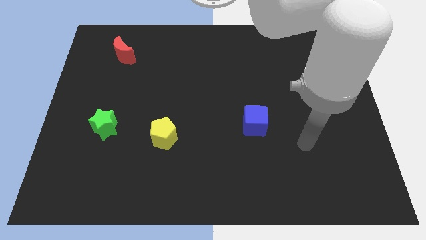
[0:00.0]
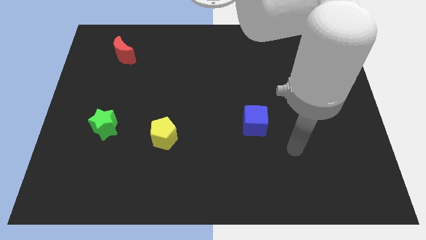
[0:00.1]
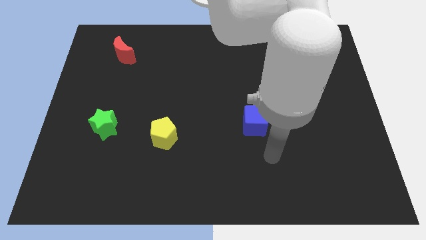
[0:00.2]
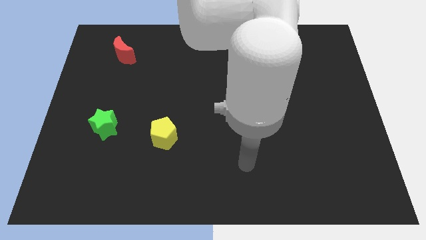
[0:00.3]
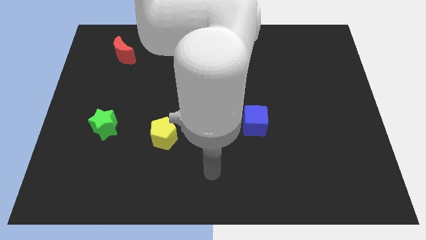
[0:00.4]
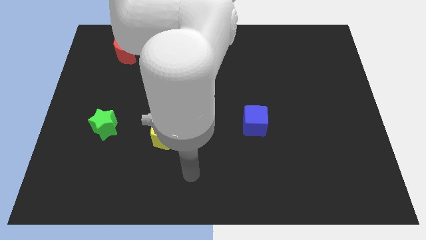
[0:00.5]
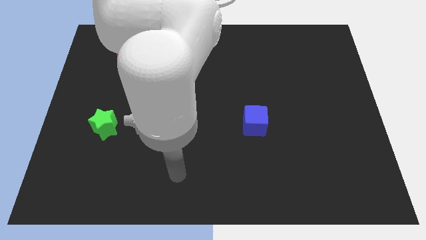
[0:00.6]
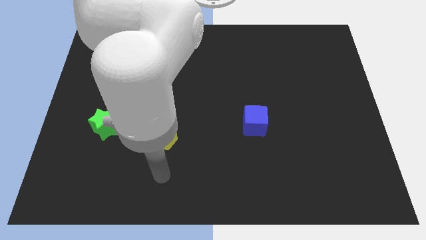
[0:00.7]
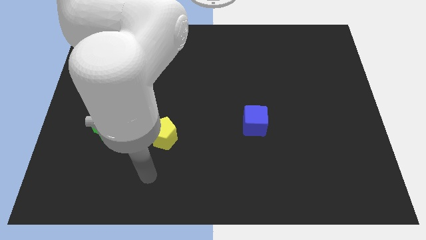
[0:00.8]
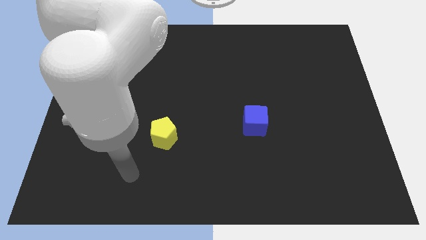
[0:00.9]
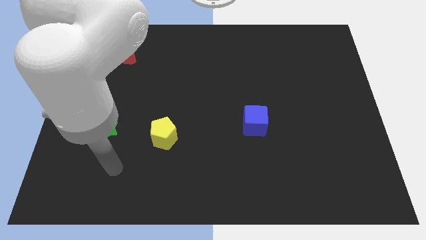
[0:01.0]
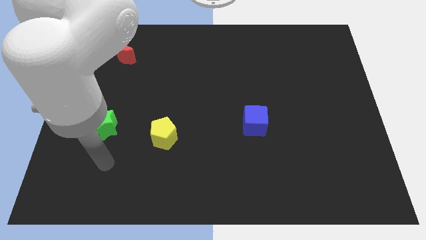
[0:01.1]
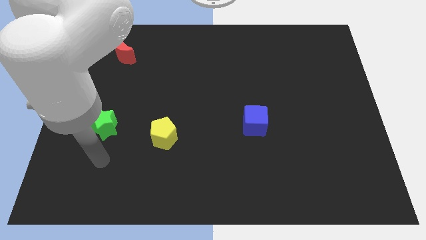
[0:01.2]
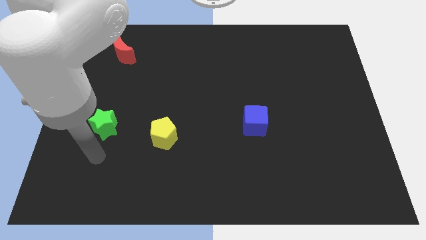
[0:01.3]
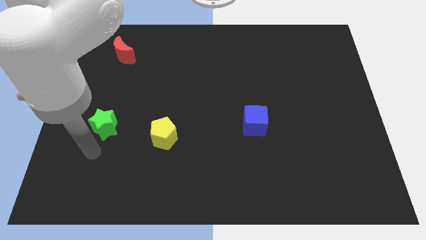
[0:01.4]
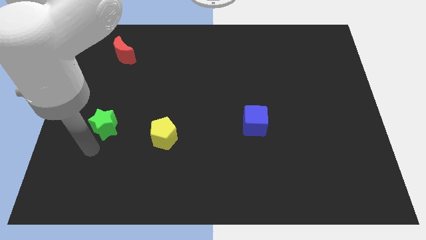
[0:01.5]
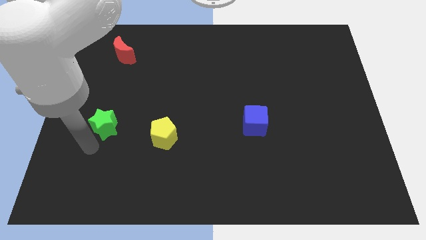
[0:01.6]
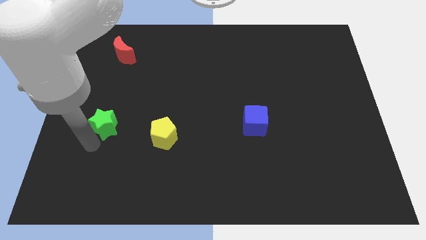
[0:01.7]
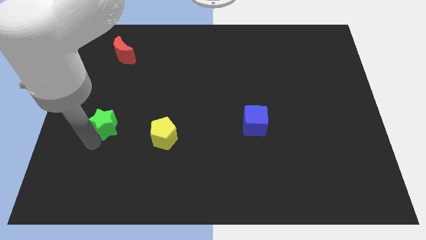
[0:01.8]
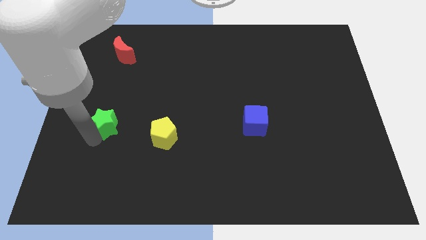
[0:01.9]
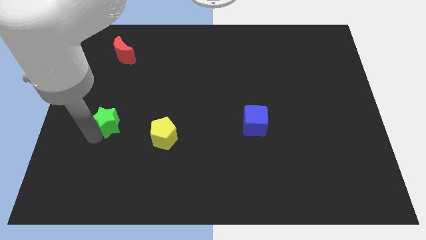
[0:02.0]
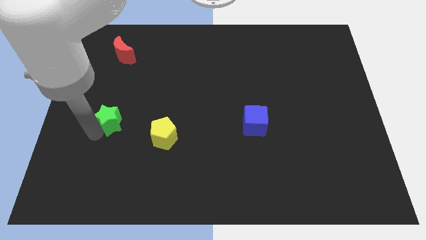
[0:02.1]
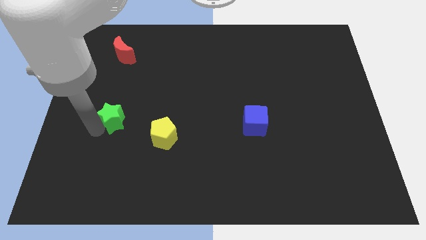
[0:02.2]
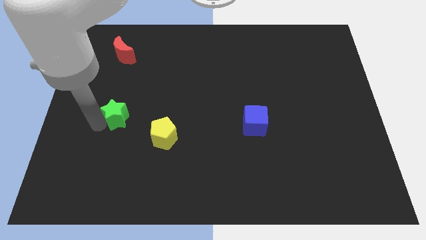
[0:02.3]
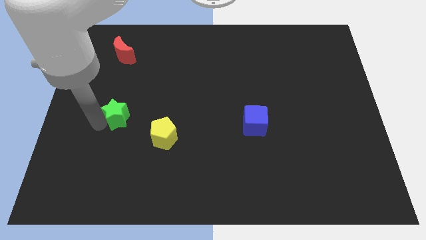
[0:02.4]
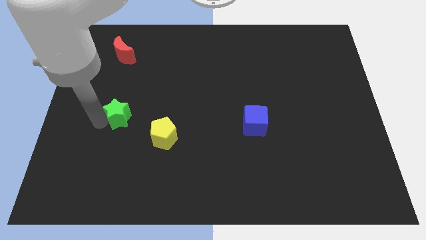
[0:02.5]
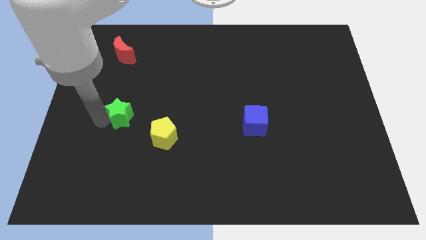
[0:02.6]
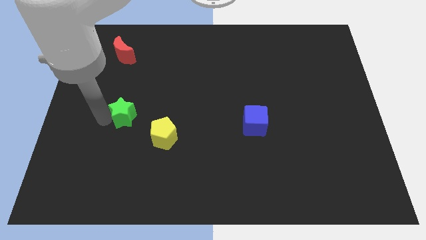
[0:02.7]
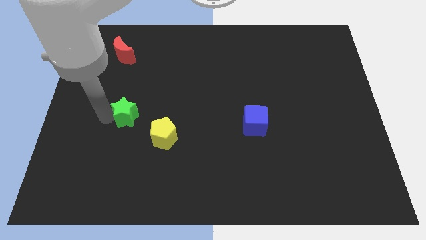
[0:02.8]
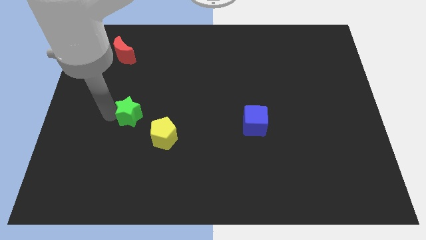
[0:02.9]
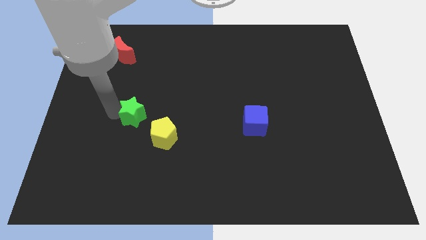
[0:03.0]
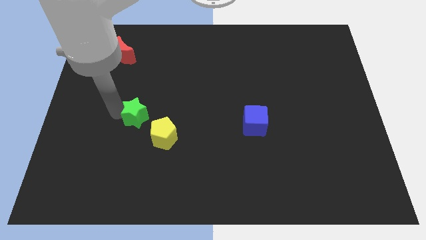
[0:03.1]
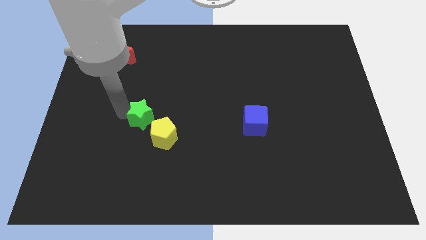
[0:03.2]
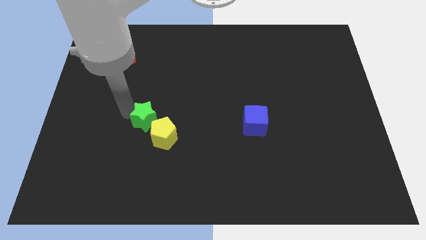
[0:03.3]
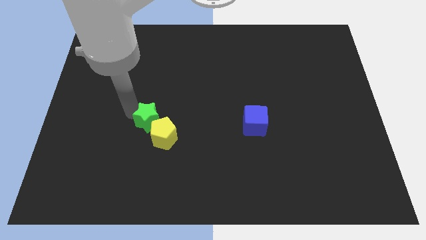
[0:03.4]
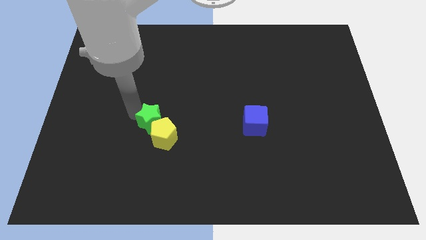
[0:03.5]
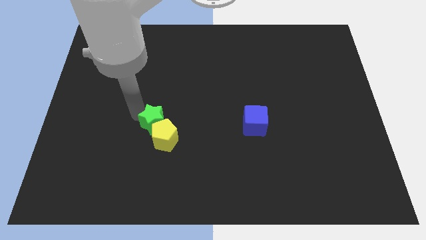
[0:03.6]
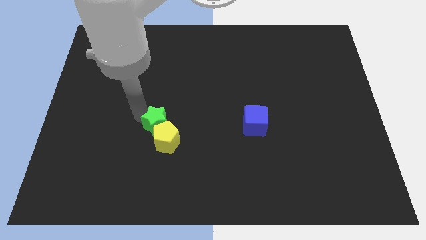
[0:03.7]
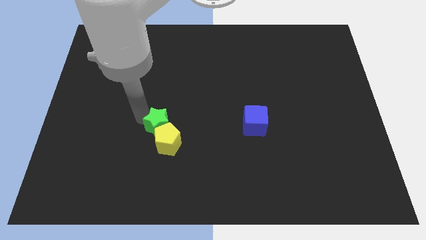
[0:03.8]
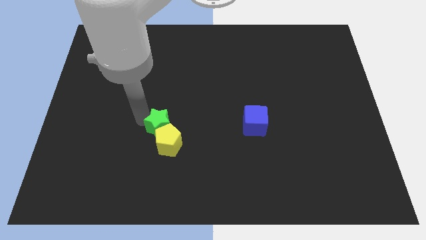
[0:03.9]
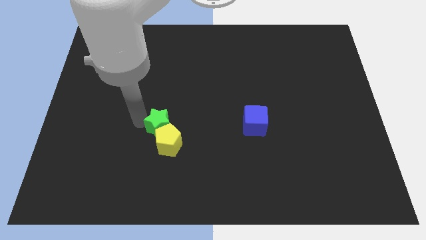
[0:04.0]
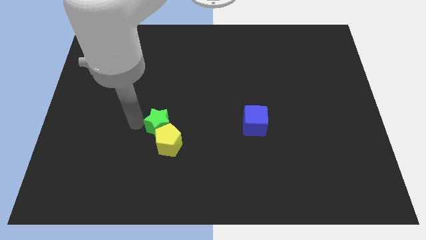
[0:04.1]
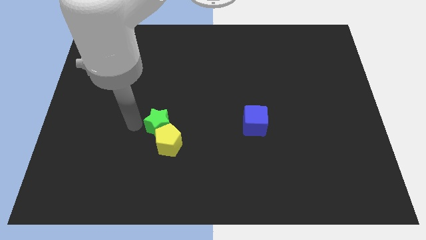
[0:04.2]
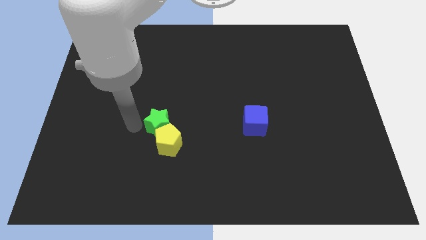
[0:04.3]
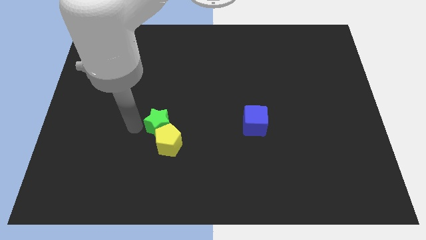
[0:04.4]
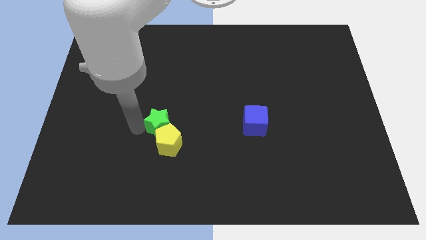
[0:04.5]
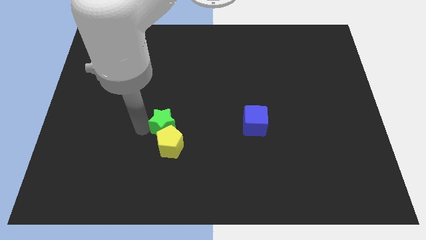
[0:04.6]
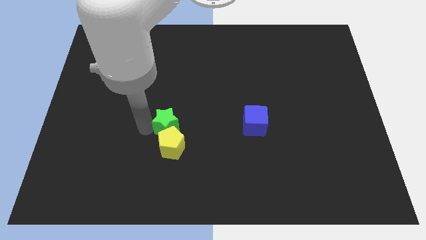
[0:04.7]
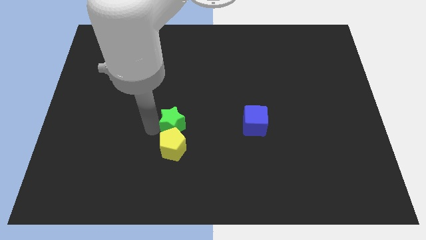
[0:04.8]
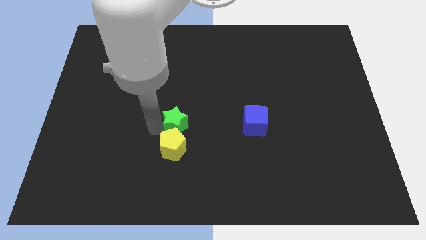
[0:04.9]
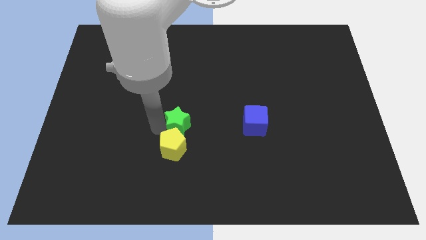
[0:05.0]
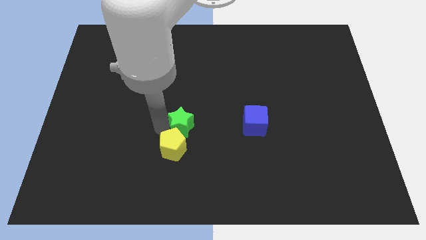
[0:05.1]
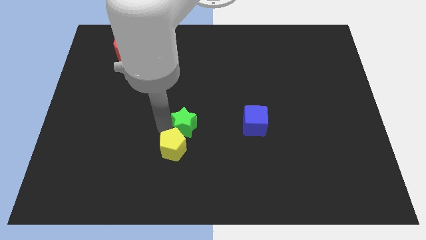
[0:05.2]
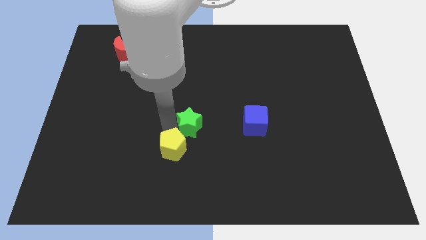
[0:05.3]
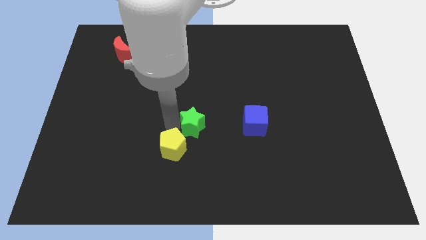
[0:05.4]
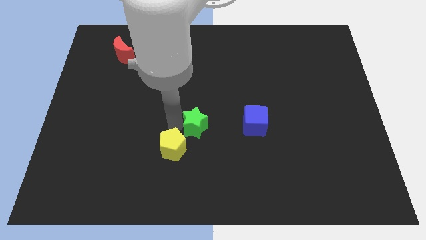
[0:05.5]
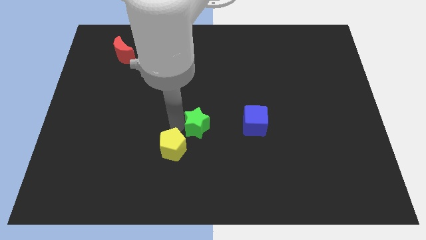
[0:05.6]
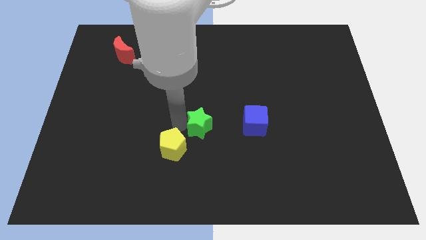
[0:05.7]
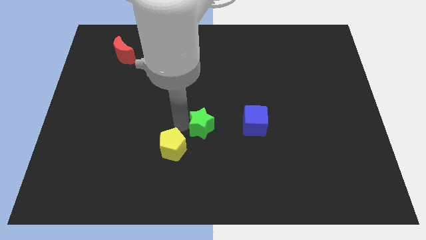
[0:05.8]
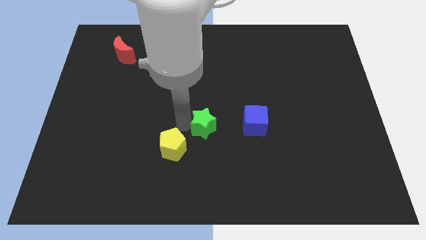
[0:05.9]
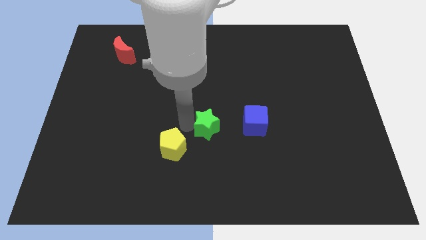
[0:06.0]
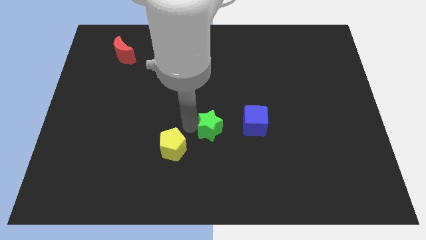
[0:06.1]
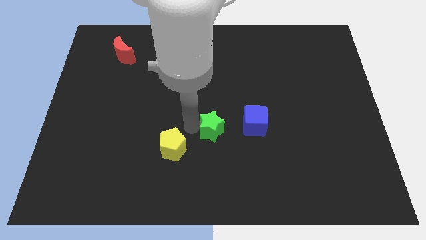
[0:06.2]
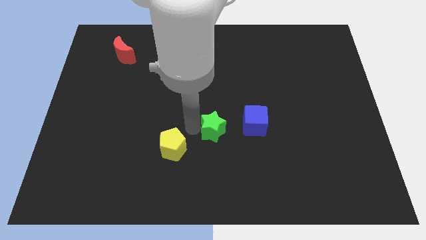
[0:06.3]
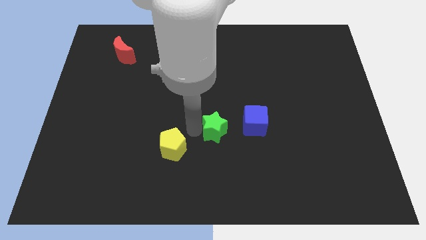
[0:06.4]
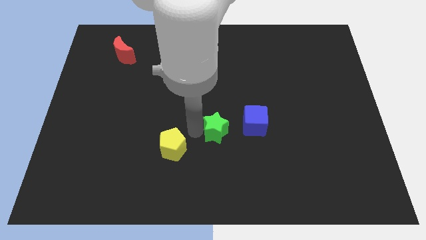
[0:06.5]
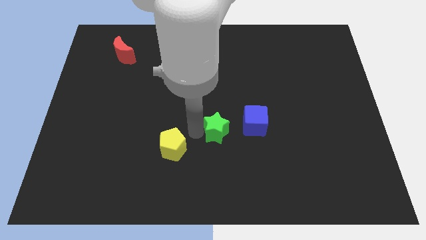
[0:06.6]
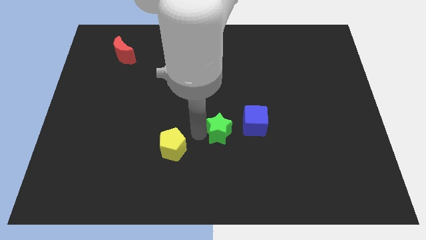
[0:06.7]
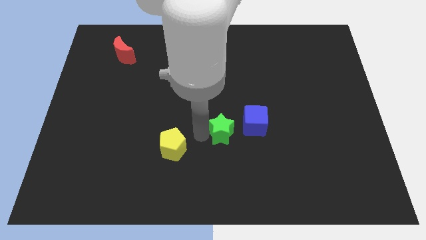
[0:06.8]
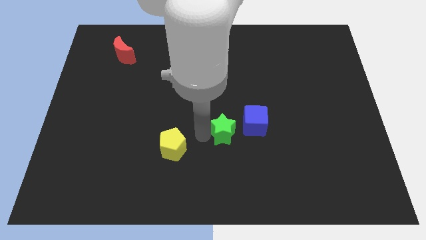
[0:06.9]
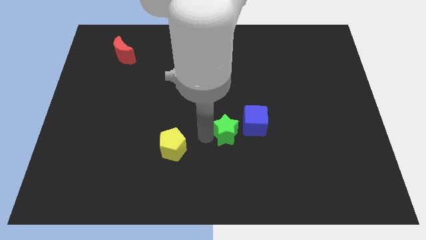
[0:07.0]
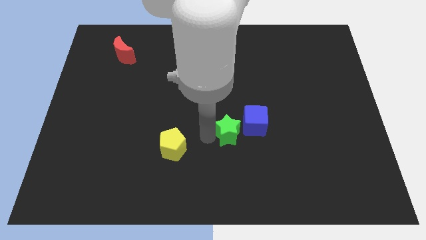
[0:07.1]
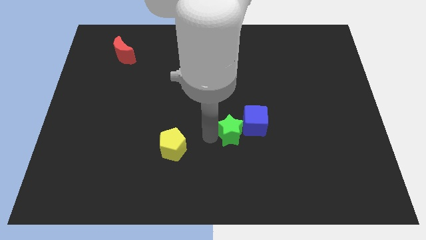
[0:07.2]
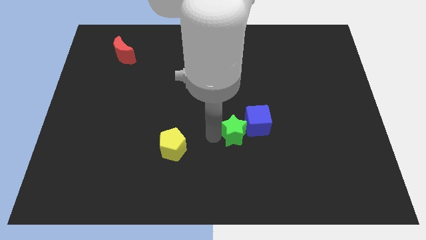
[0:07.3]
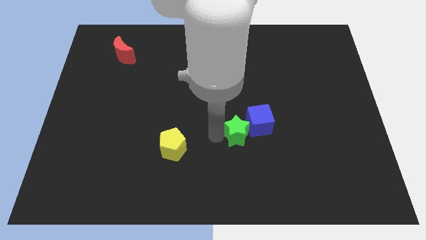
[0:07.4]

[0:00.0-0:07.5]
slide the star close to the blue cube

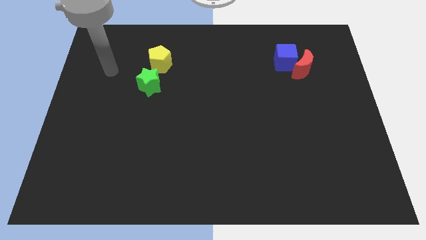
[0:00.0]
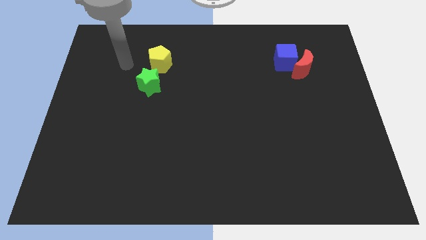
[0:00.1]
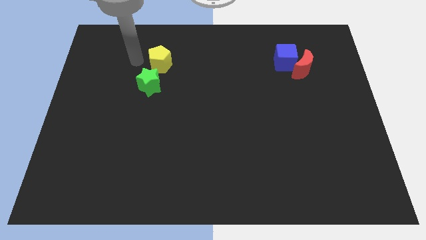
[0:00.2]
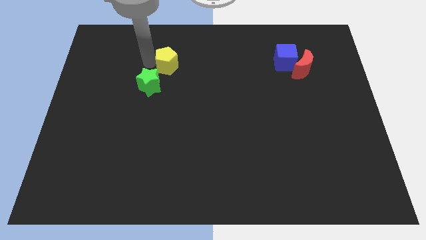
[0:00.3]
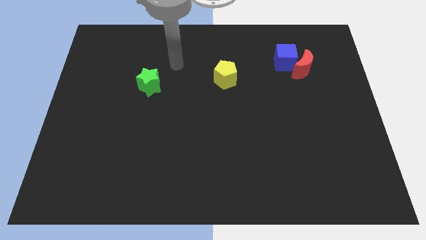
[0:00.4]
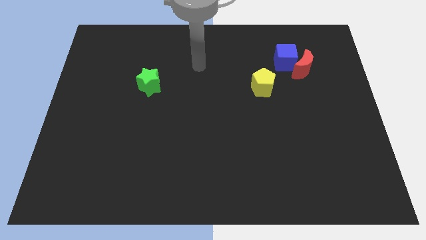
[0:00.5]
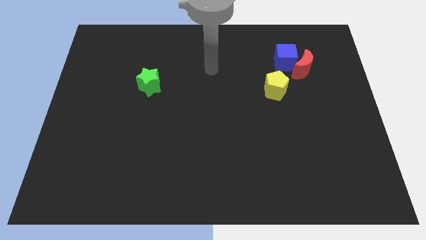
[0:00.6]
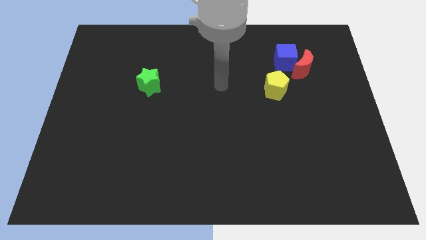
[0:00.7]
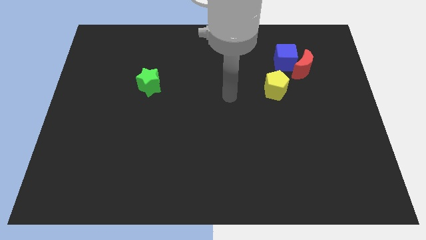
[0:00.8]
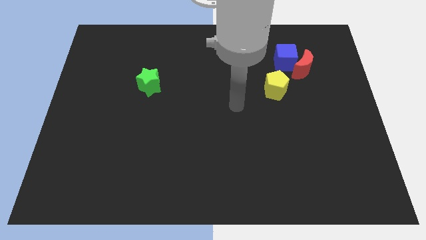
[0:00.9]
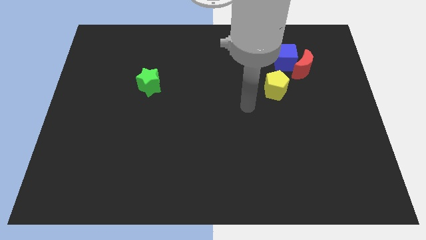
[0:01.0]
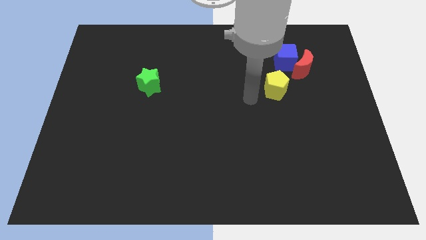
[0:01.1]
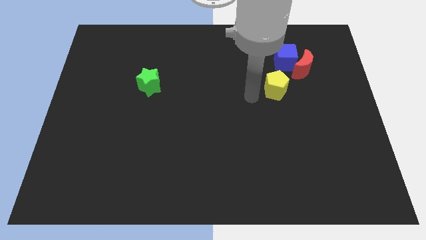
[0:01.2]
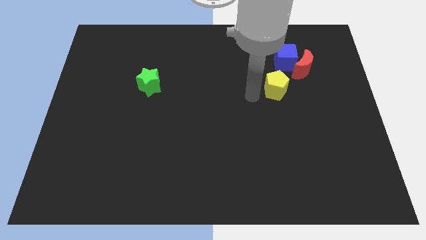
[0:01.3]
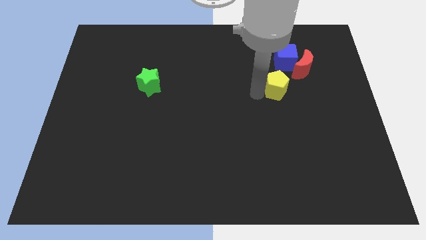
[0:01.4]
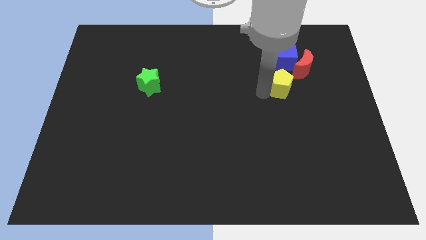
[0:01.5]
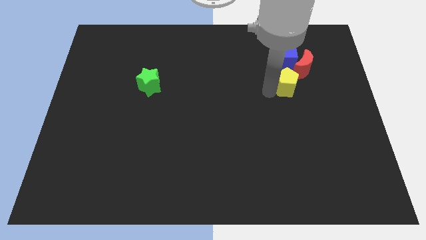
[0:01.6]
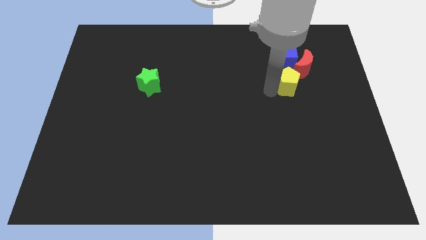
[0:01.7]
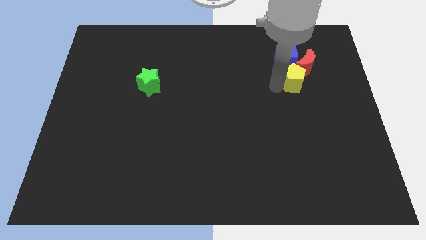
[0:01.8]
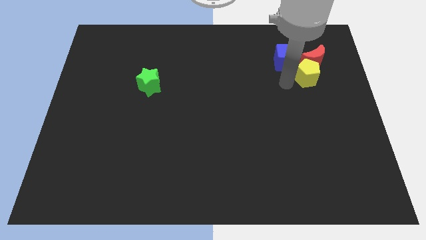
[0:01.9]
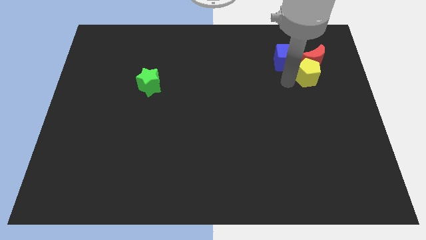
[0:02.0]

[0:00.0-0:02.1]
move the yellow block to the red block
